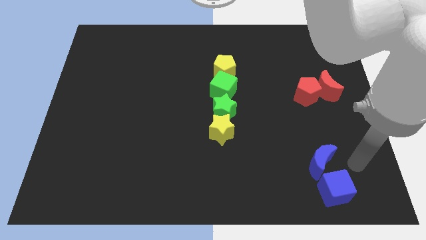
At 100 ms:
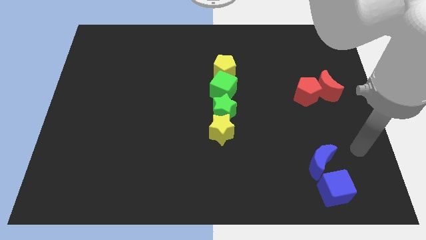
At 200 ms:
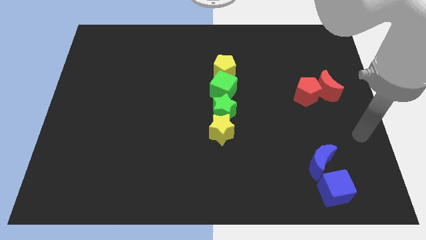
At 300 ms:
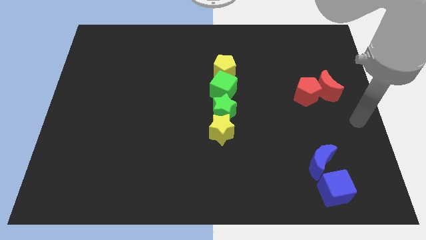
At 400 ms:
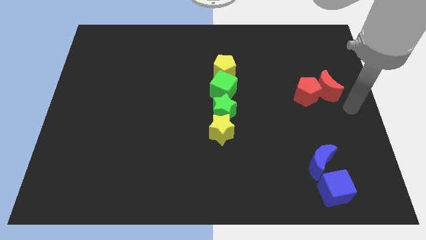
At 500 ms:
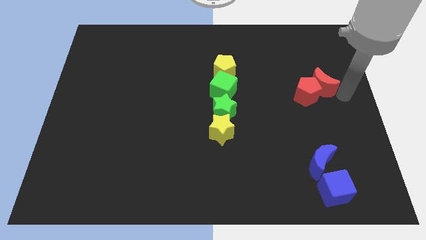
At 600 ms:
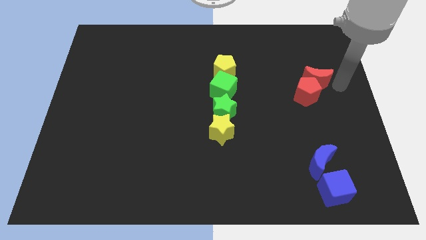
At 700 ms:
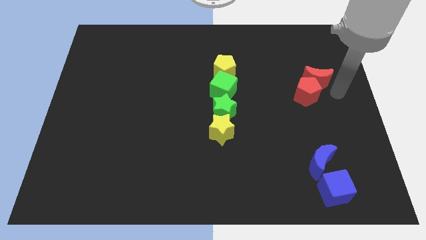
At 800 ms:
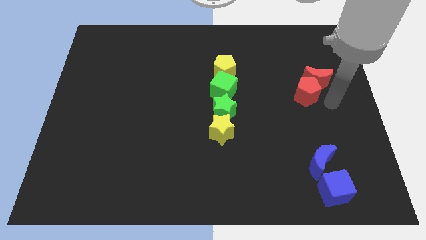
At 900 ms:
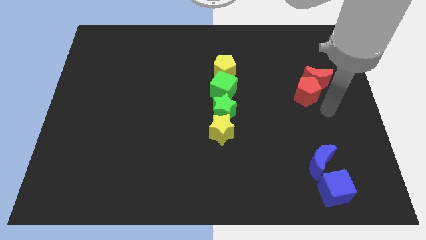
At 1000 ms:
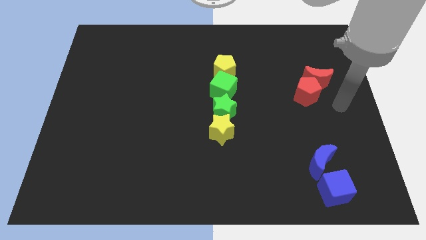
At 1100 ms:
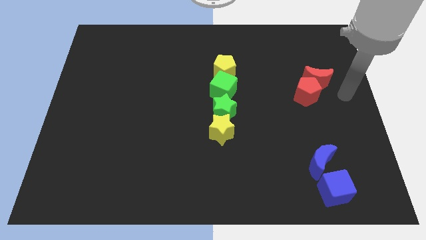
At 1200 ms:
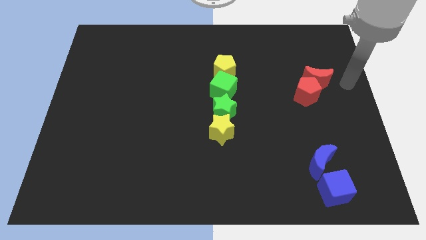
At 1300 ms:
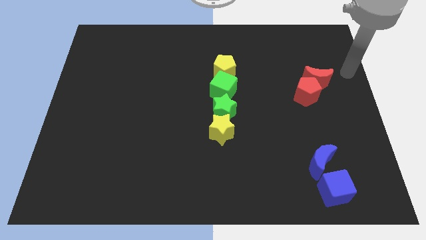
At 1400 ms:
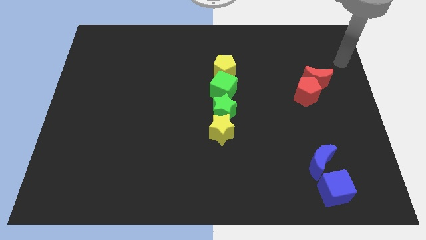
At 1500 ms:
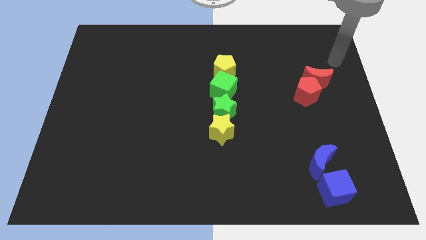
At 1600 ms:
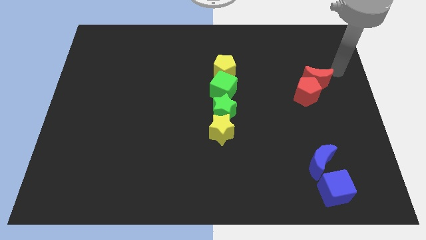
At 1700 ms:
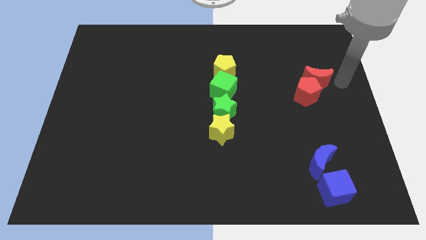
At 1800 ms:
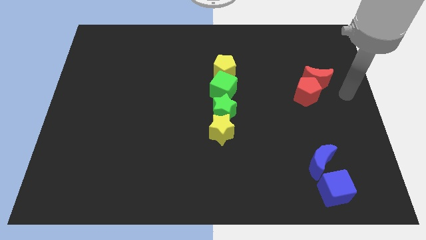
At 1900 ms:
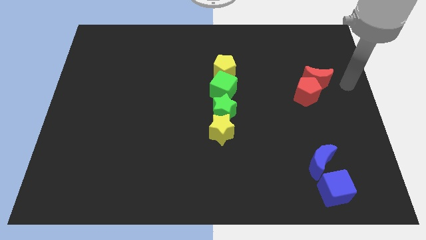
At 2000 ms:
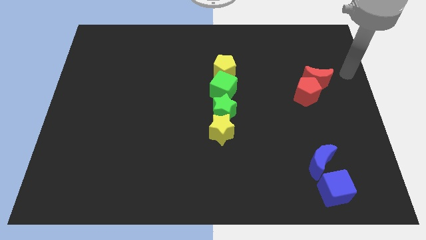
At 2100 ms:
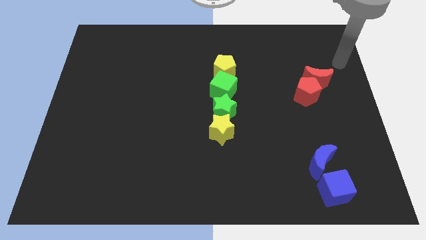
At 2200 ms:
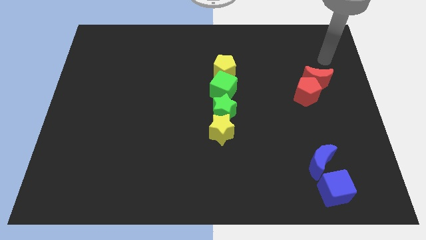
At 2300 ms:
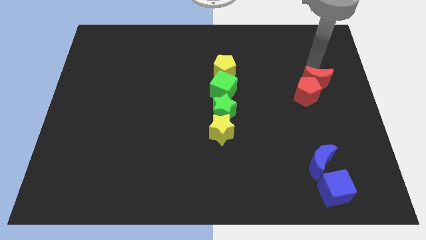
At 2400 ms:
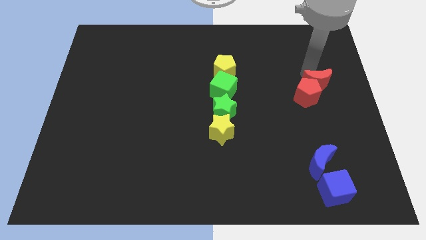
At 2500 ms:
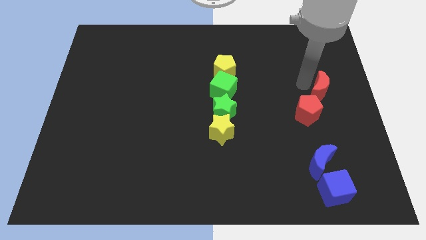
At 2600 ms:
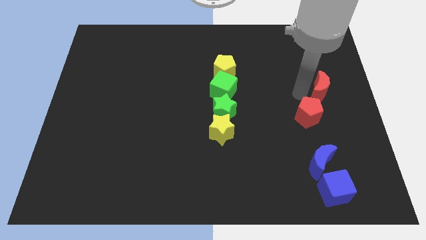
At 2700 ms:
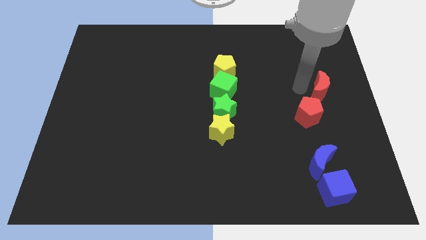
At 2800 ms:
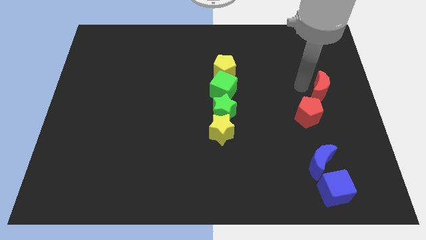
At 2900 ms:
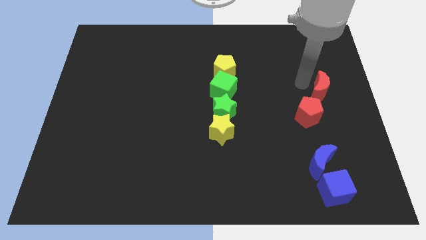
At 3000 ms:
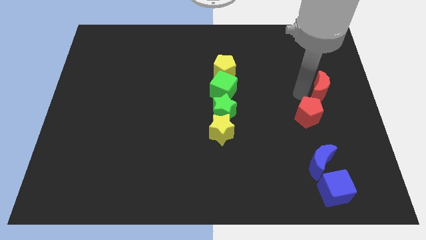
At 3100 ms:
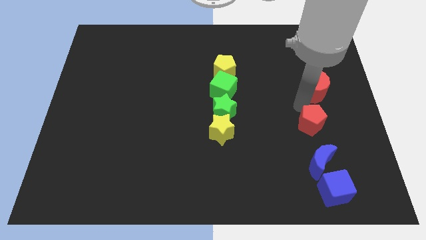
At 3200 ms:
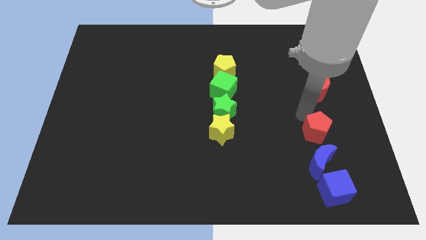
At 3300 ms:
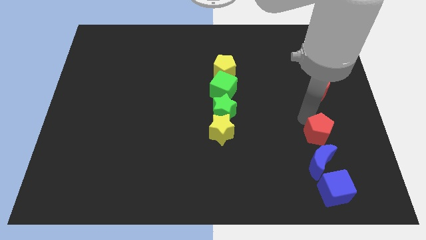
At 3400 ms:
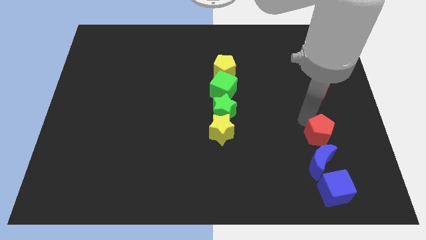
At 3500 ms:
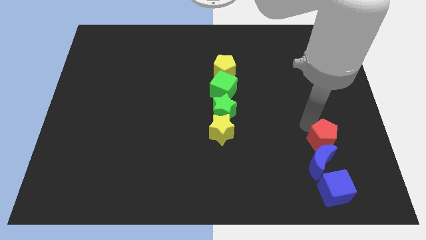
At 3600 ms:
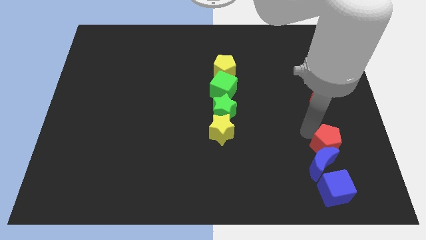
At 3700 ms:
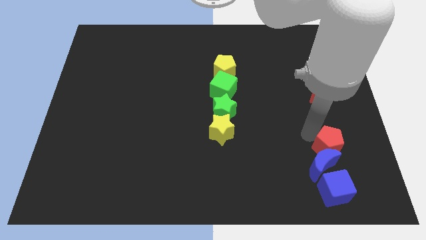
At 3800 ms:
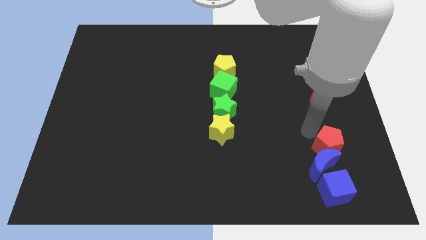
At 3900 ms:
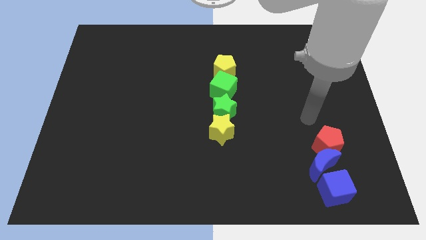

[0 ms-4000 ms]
separate the red pentagon from the red moon

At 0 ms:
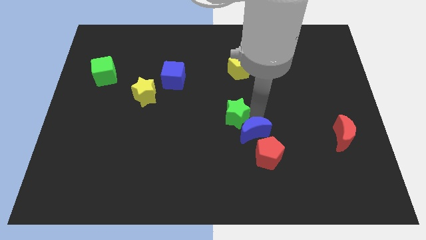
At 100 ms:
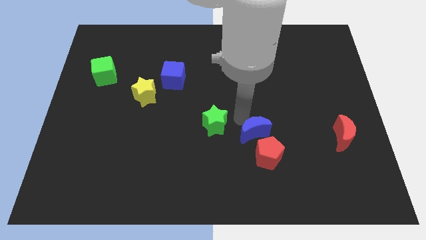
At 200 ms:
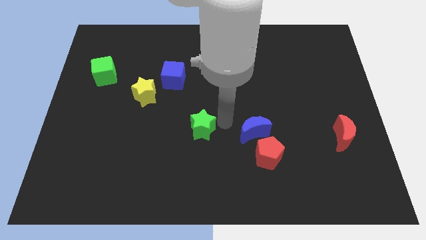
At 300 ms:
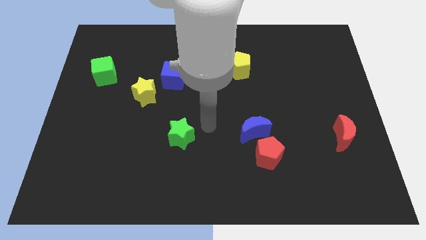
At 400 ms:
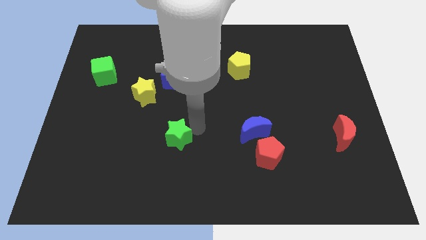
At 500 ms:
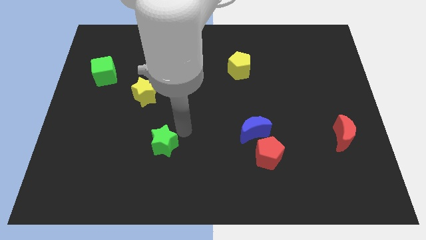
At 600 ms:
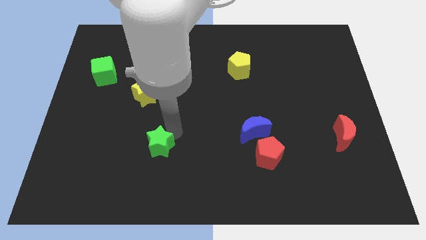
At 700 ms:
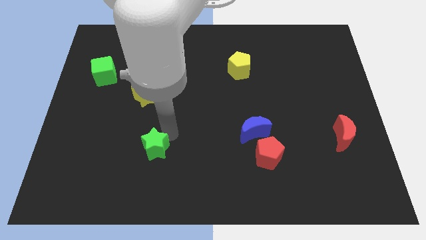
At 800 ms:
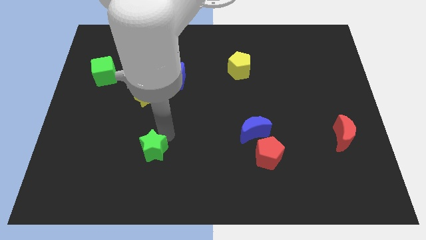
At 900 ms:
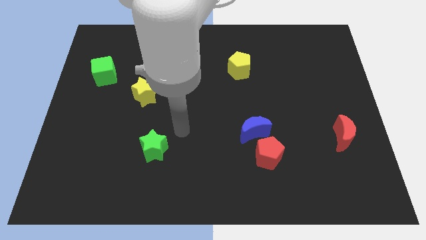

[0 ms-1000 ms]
move the green star below the yellow star

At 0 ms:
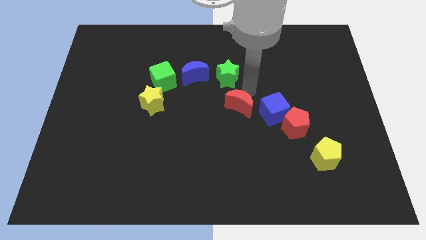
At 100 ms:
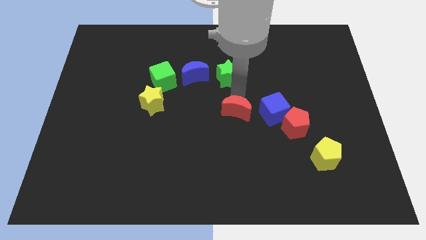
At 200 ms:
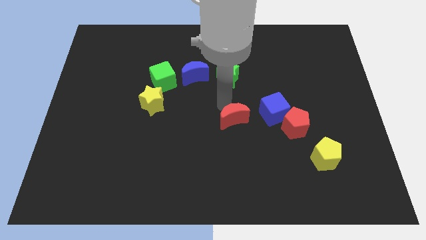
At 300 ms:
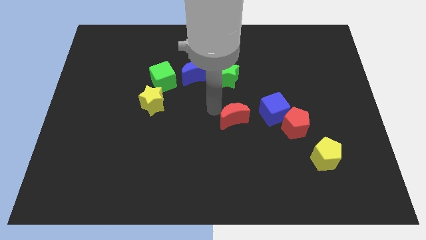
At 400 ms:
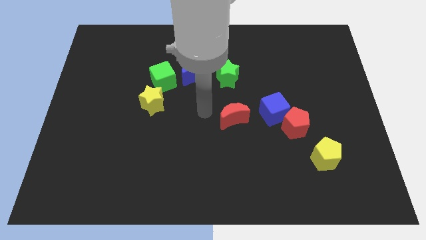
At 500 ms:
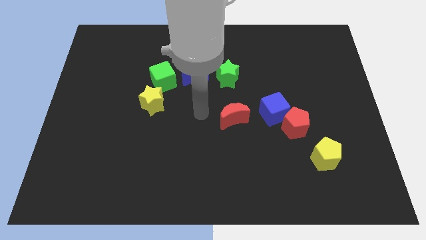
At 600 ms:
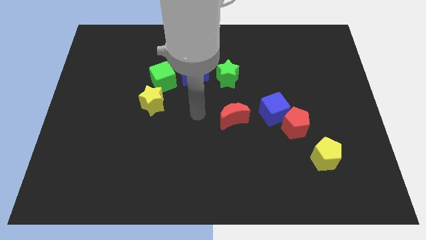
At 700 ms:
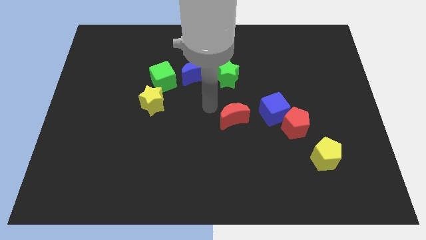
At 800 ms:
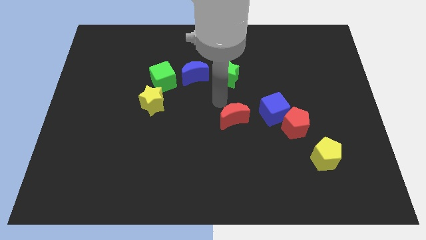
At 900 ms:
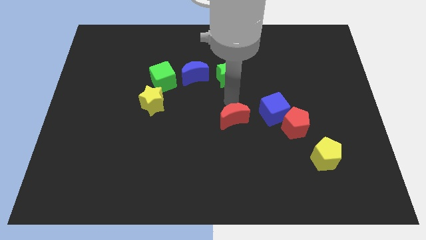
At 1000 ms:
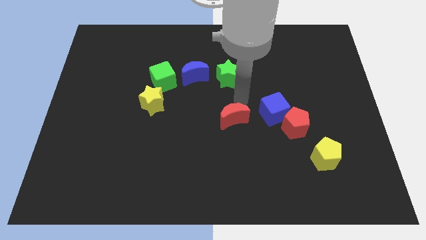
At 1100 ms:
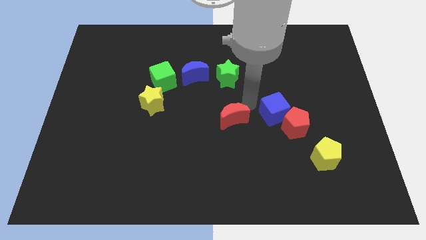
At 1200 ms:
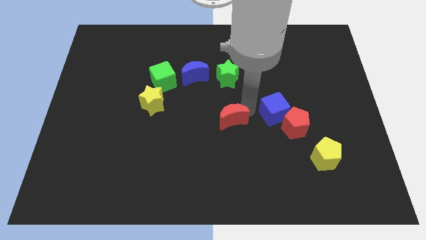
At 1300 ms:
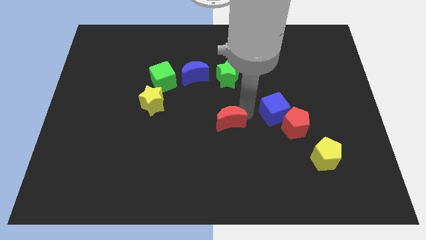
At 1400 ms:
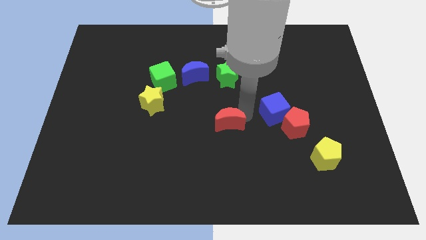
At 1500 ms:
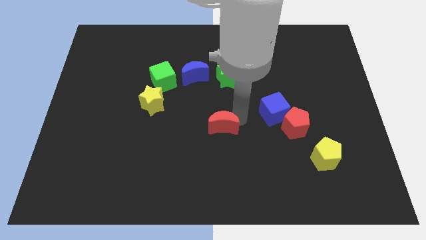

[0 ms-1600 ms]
slightly push the red crescent to the left side of the blue cube

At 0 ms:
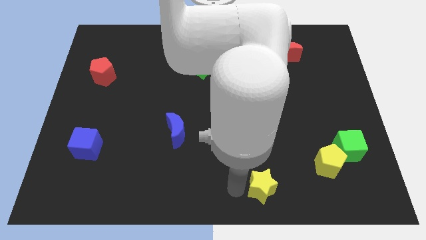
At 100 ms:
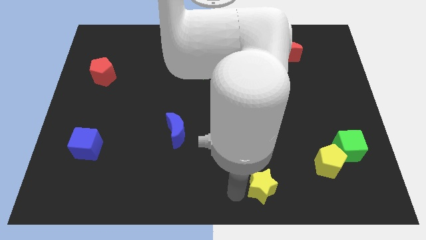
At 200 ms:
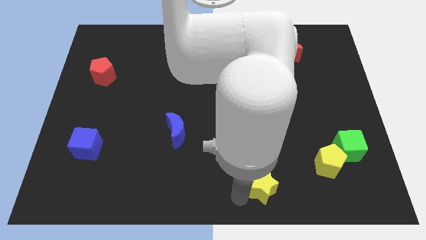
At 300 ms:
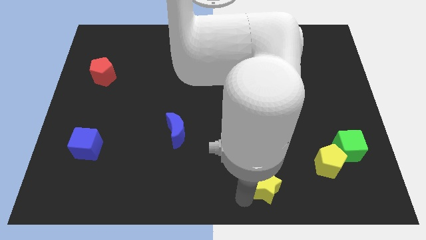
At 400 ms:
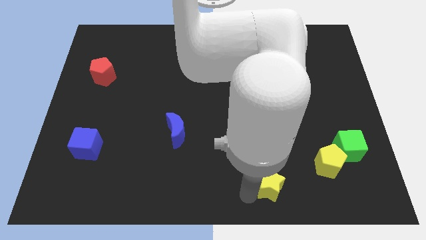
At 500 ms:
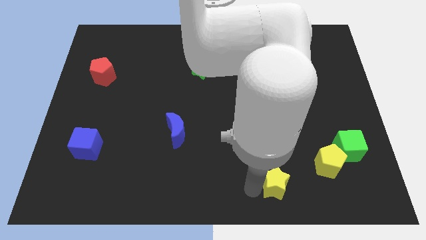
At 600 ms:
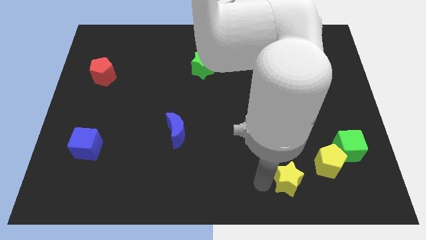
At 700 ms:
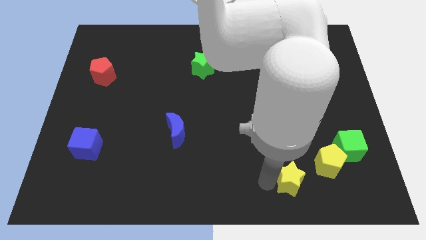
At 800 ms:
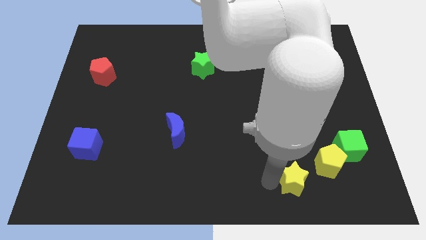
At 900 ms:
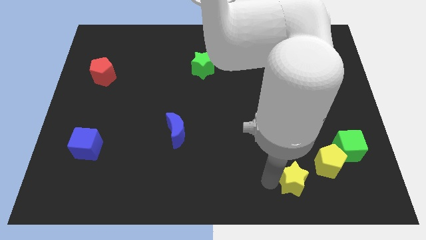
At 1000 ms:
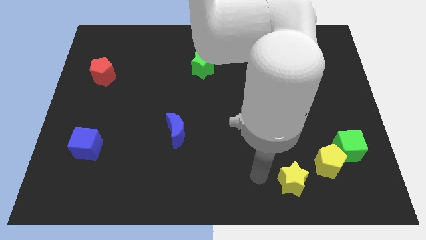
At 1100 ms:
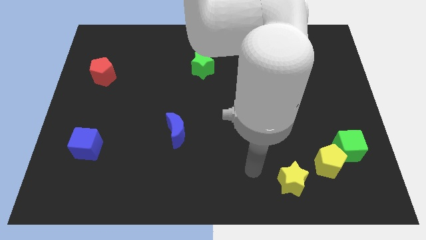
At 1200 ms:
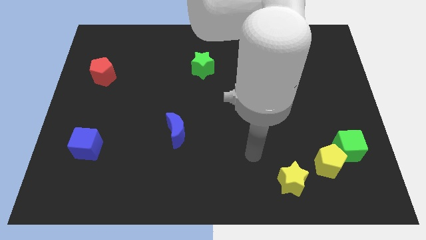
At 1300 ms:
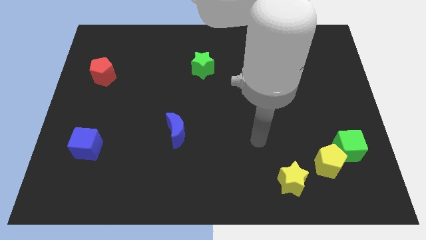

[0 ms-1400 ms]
push the yellow star to the left of the yellow pentagon

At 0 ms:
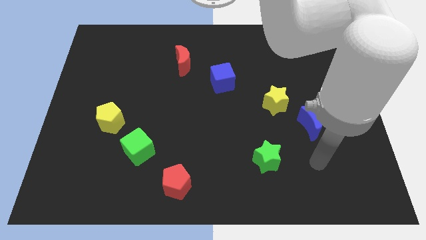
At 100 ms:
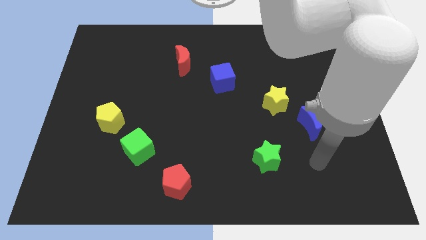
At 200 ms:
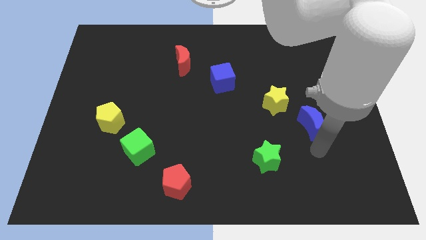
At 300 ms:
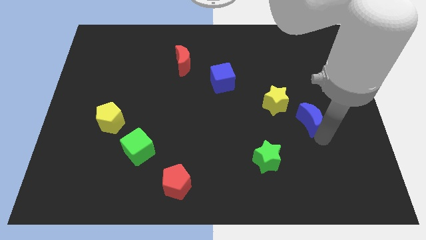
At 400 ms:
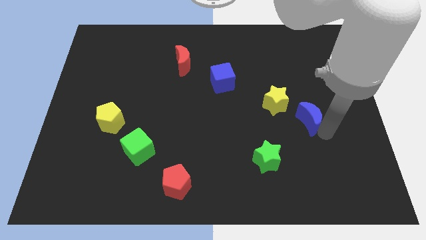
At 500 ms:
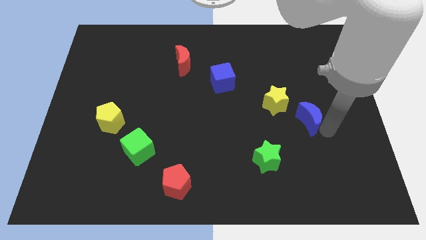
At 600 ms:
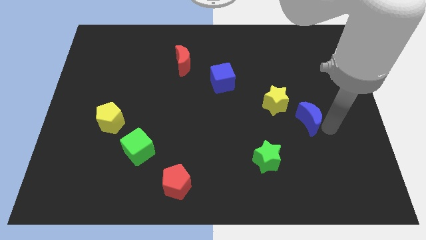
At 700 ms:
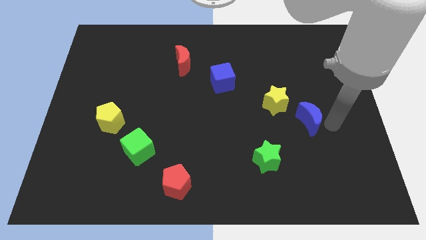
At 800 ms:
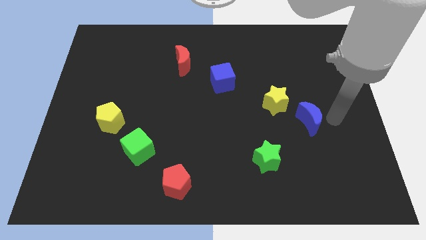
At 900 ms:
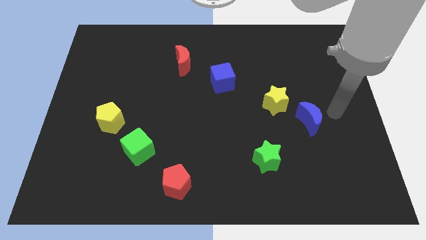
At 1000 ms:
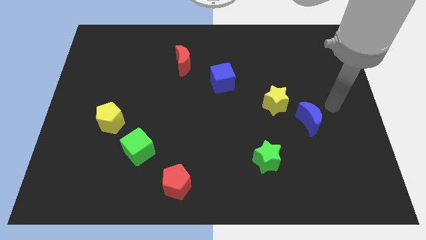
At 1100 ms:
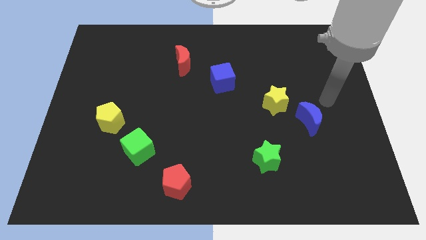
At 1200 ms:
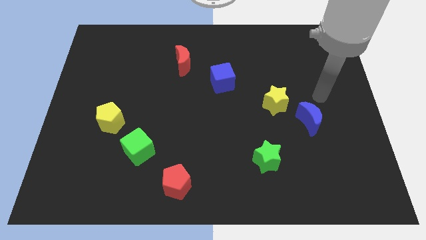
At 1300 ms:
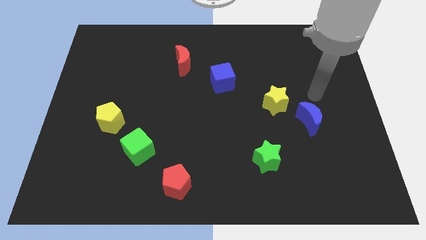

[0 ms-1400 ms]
slightly move the blue crescent to the left of the board
